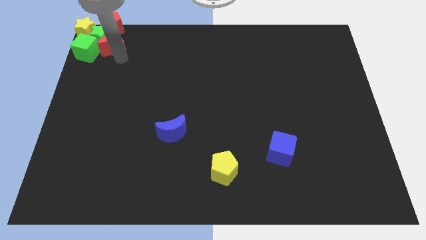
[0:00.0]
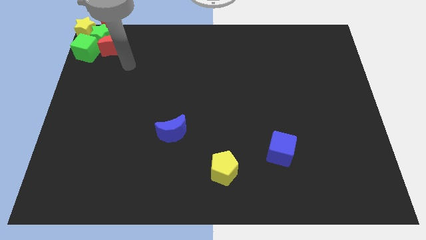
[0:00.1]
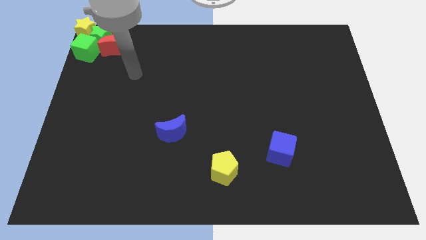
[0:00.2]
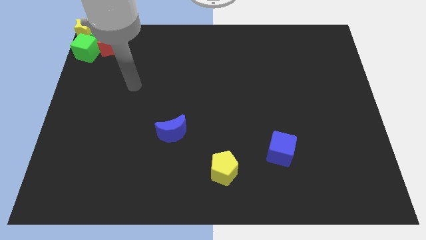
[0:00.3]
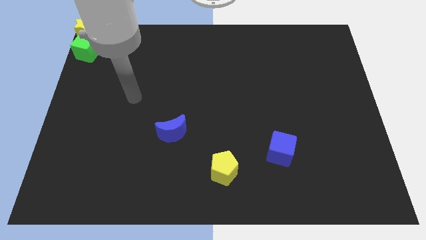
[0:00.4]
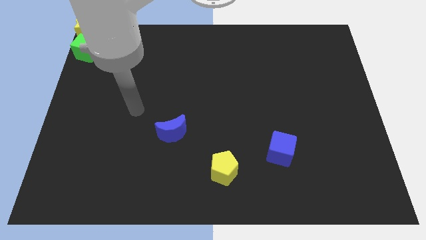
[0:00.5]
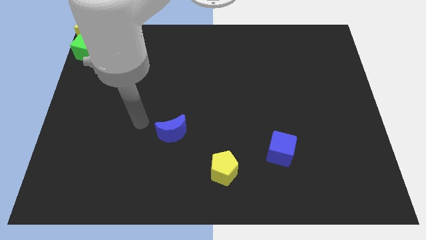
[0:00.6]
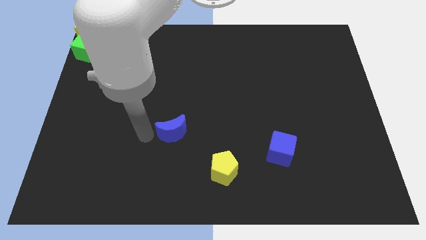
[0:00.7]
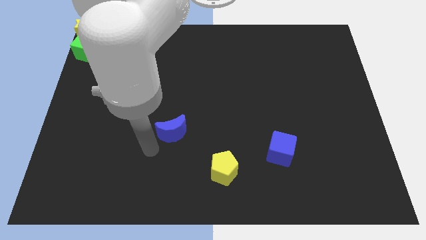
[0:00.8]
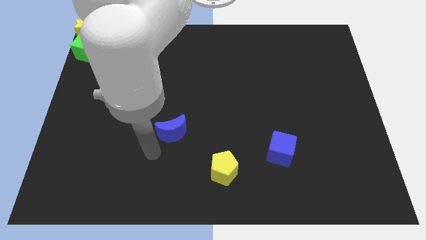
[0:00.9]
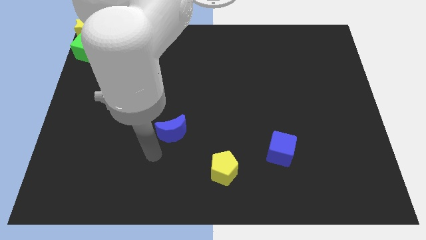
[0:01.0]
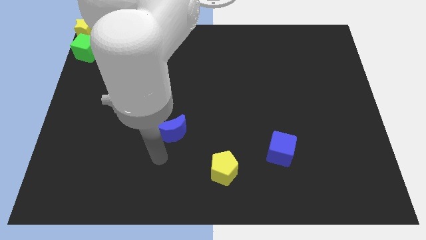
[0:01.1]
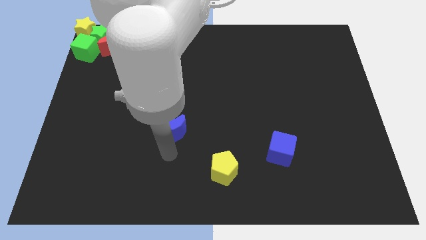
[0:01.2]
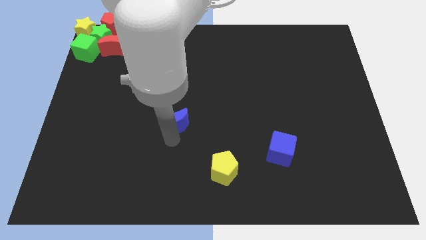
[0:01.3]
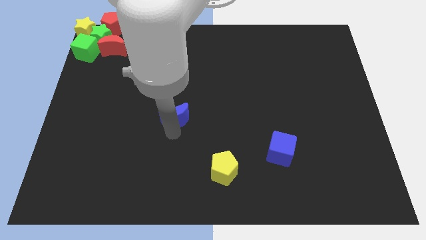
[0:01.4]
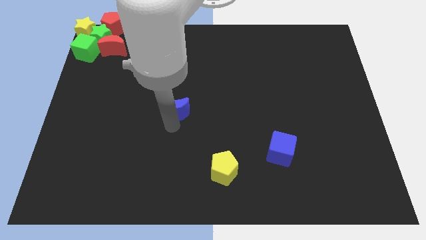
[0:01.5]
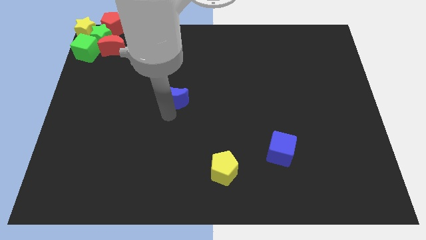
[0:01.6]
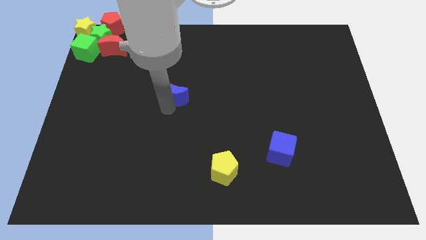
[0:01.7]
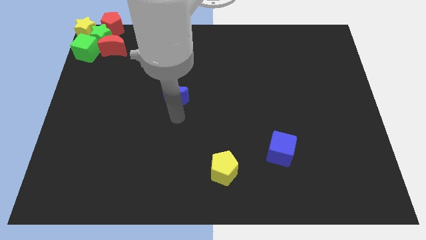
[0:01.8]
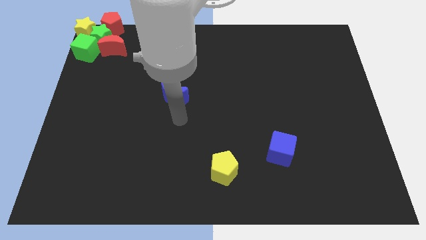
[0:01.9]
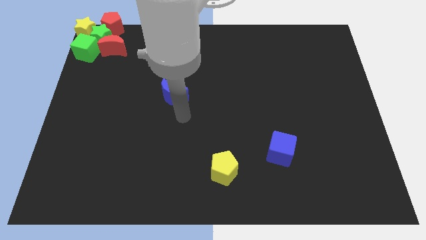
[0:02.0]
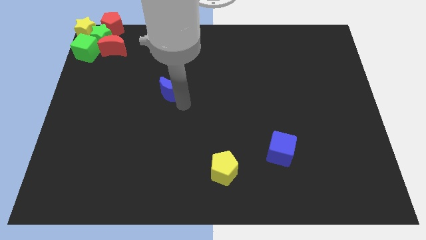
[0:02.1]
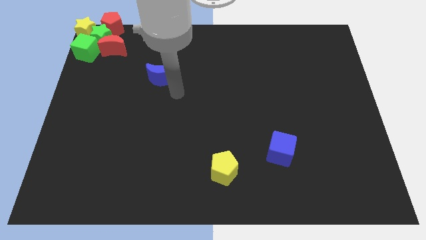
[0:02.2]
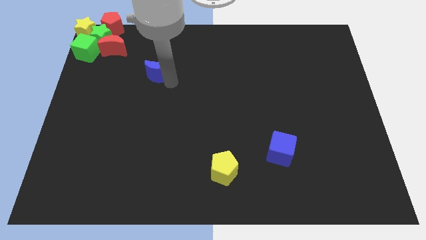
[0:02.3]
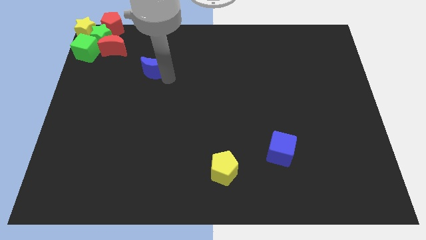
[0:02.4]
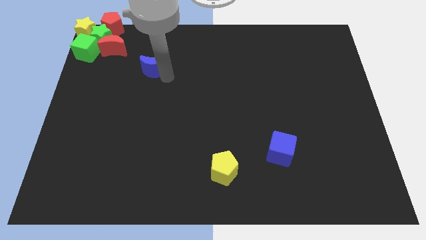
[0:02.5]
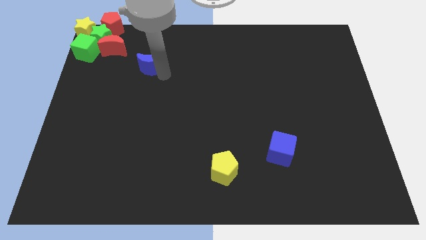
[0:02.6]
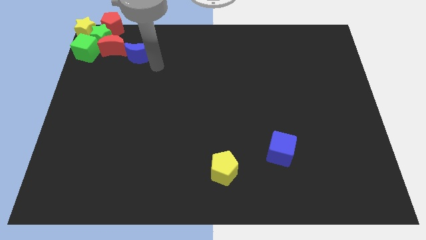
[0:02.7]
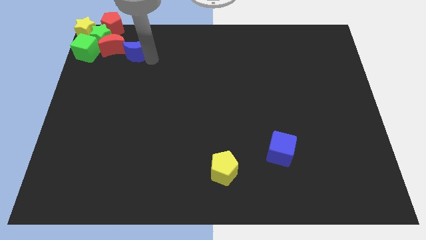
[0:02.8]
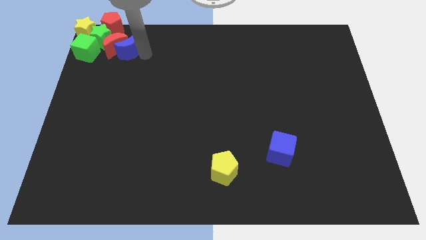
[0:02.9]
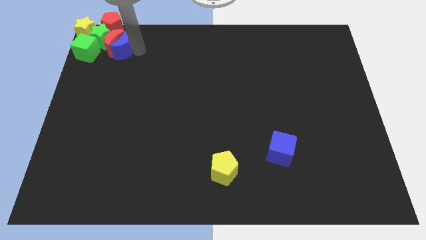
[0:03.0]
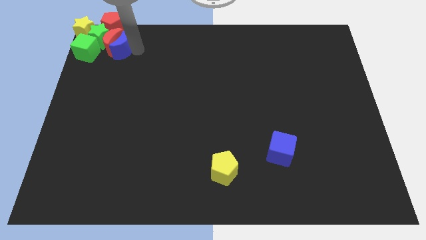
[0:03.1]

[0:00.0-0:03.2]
move the blue moon into the red moon

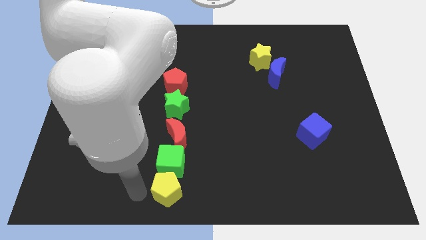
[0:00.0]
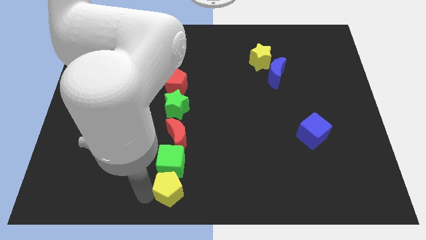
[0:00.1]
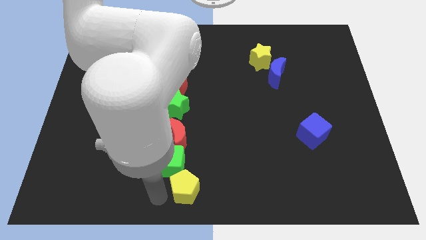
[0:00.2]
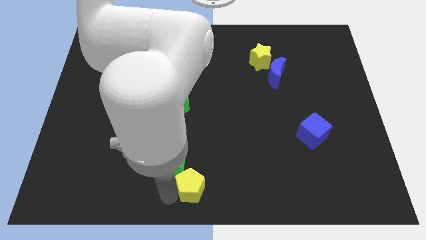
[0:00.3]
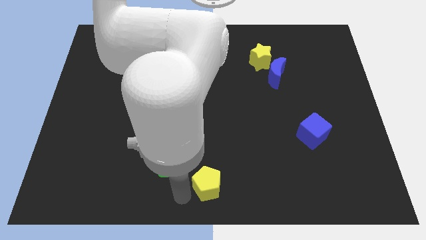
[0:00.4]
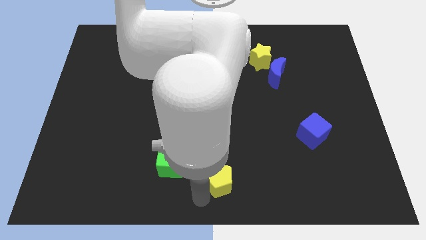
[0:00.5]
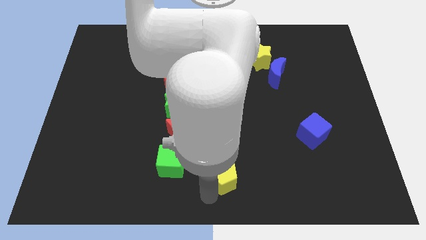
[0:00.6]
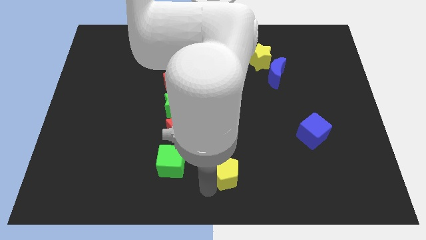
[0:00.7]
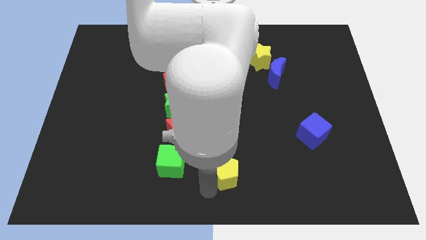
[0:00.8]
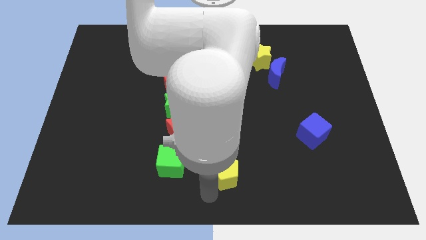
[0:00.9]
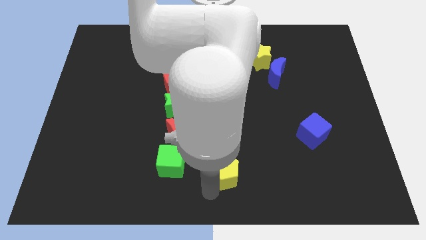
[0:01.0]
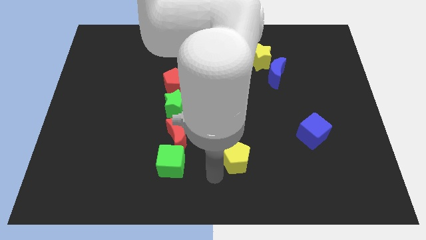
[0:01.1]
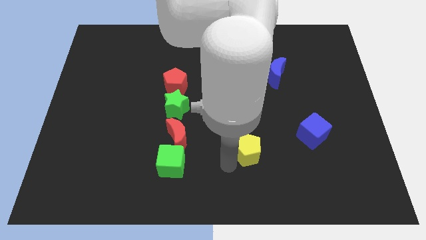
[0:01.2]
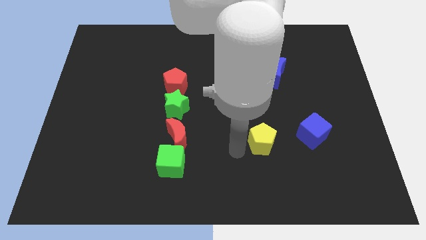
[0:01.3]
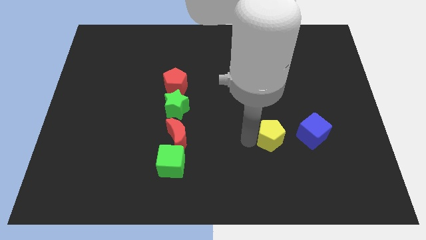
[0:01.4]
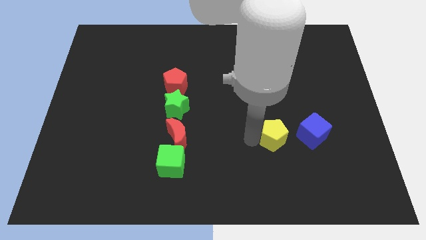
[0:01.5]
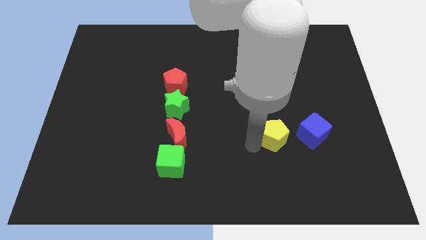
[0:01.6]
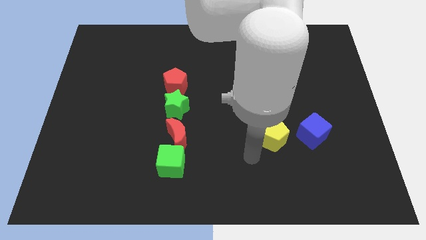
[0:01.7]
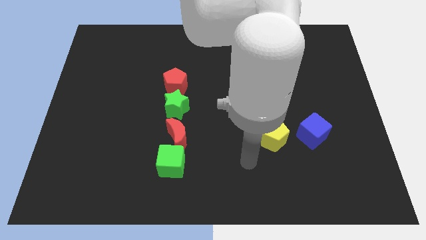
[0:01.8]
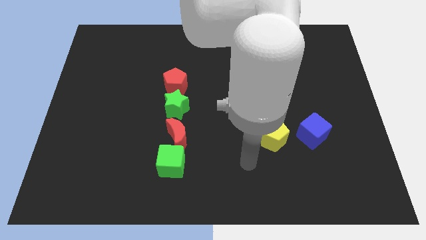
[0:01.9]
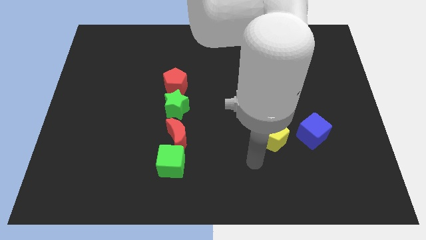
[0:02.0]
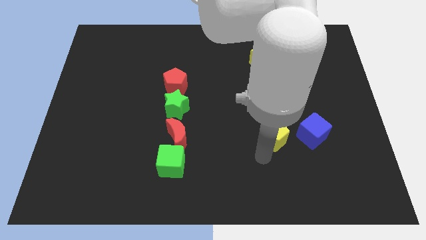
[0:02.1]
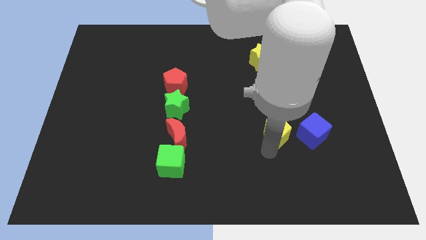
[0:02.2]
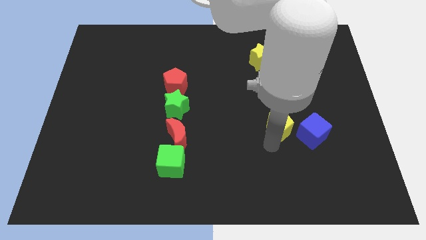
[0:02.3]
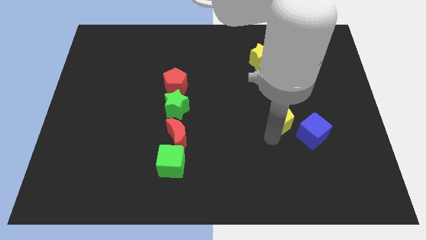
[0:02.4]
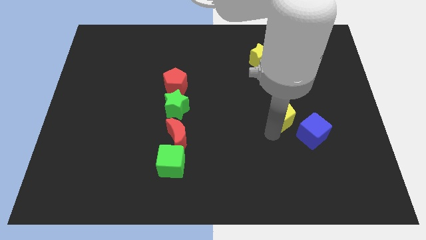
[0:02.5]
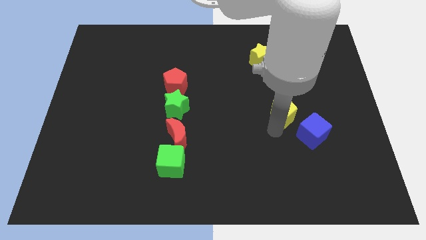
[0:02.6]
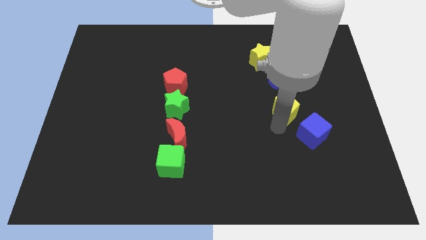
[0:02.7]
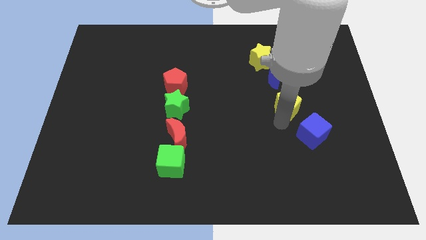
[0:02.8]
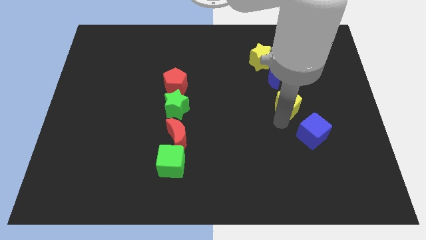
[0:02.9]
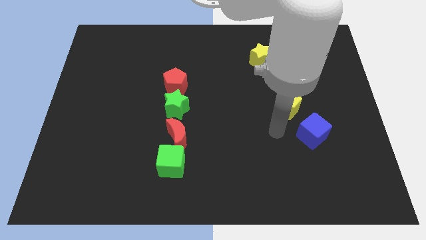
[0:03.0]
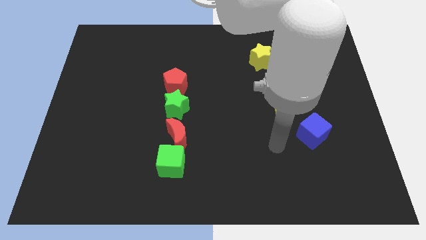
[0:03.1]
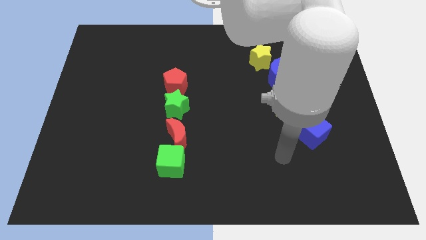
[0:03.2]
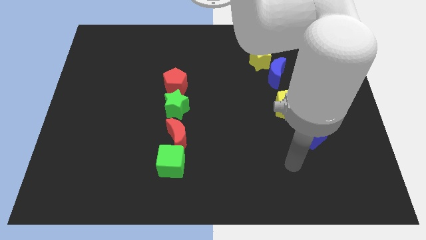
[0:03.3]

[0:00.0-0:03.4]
move the yellow pentagon to the bottom of the blue moon

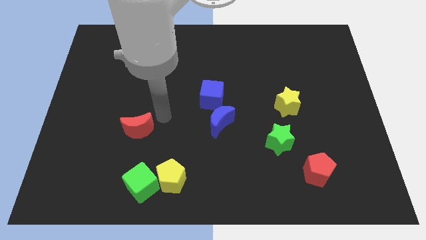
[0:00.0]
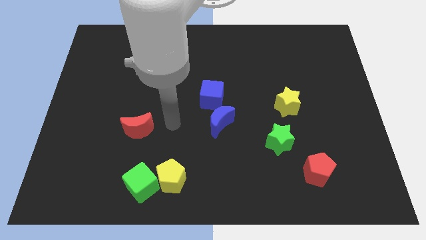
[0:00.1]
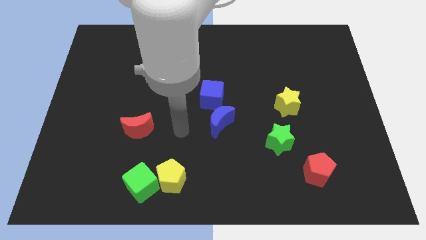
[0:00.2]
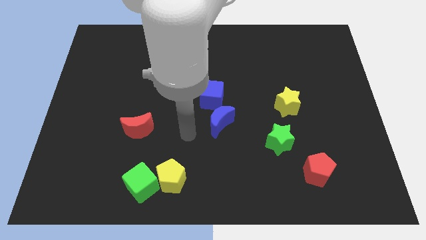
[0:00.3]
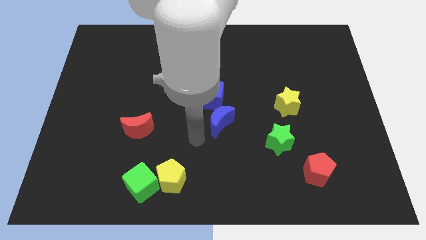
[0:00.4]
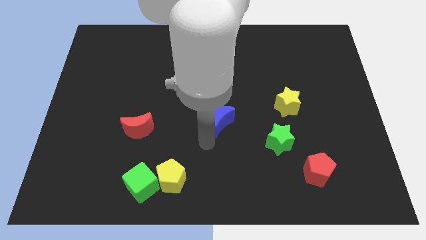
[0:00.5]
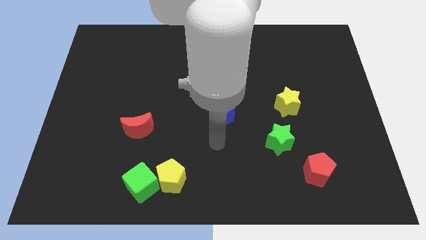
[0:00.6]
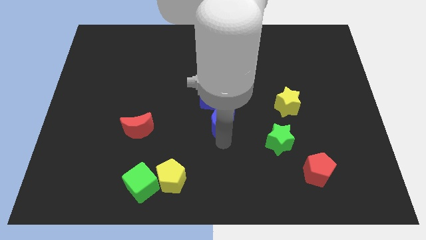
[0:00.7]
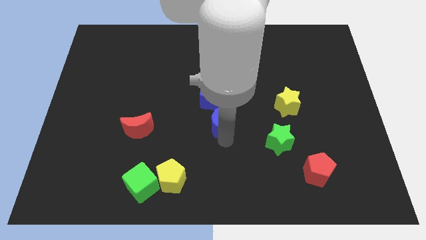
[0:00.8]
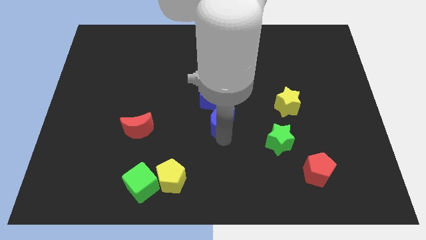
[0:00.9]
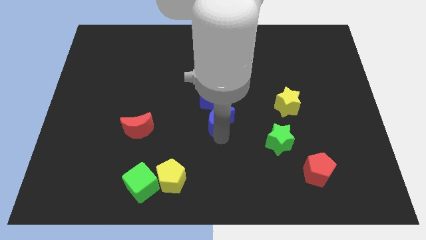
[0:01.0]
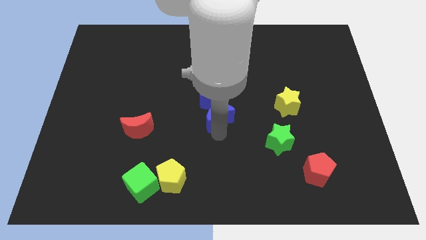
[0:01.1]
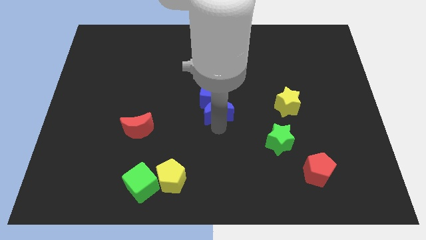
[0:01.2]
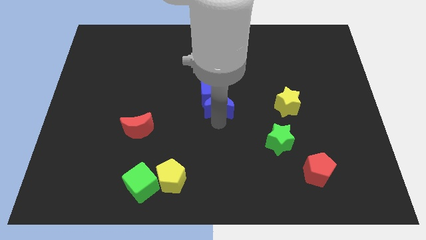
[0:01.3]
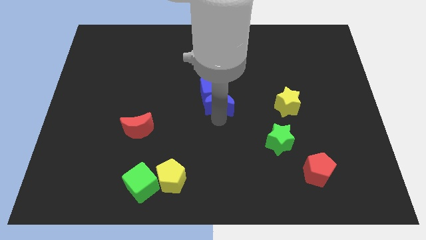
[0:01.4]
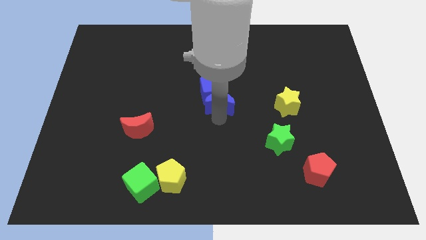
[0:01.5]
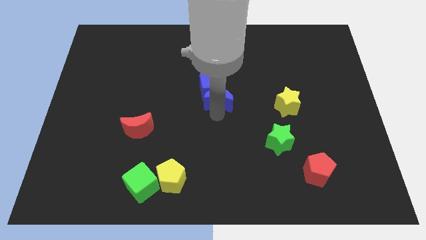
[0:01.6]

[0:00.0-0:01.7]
push the blue crescent into the blue cube

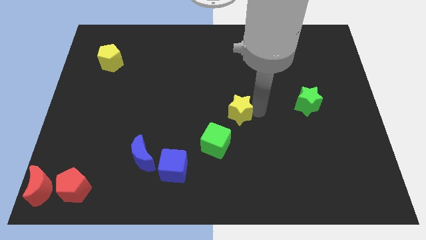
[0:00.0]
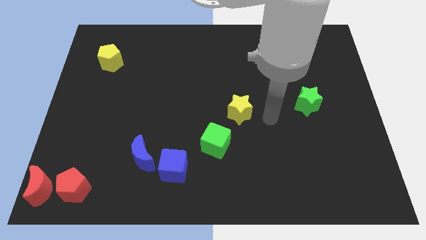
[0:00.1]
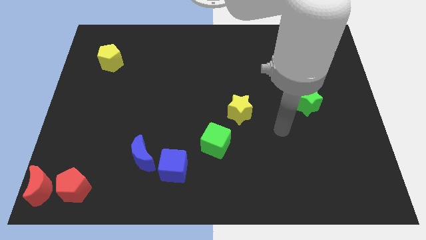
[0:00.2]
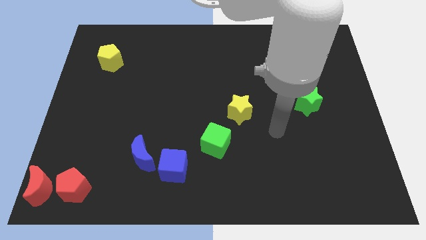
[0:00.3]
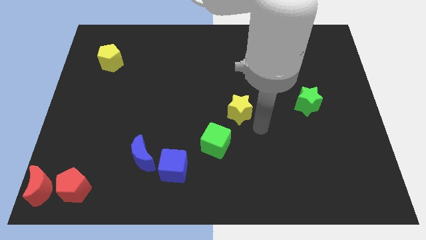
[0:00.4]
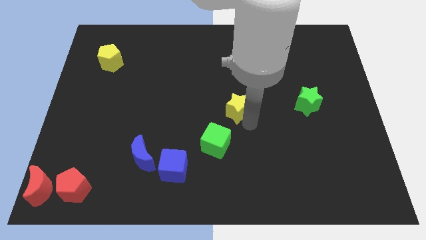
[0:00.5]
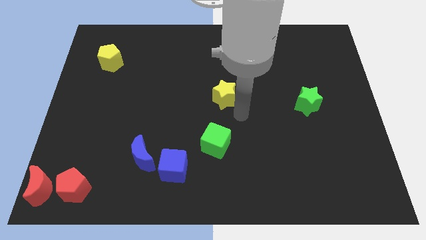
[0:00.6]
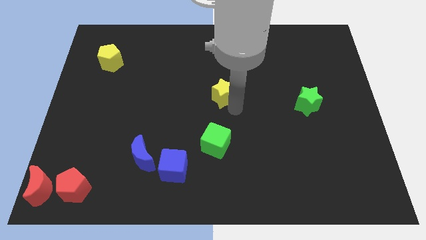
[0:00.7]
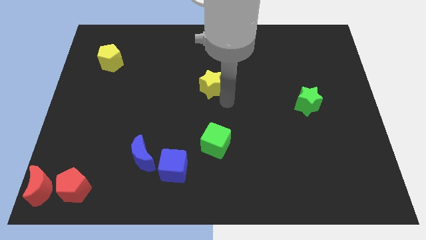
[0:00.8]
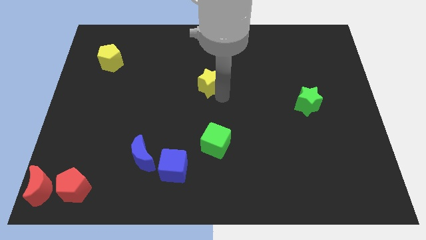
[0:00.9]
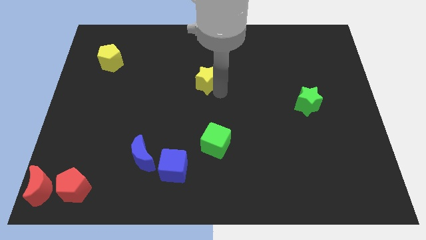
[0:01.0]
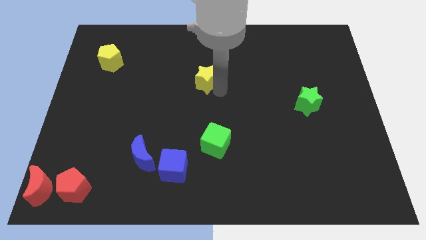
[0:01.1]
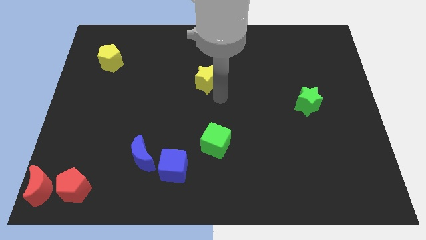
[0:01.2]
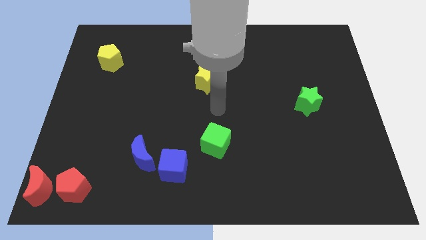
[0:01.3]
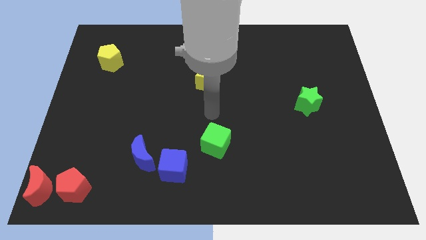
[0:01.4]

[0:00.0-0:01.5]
push the yellow star to the top side of the green cube
